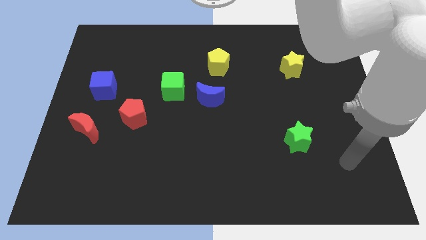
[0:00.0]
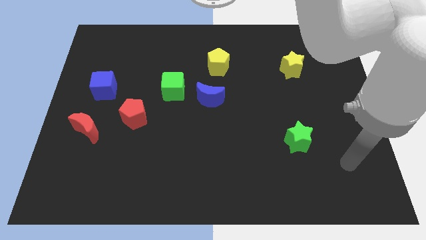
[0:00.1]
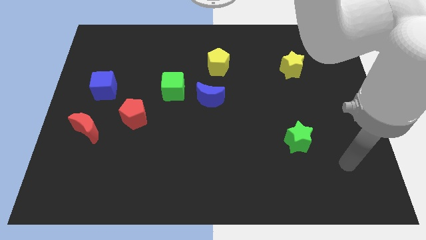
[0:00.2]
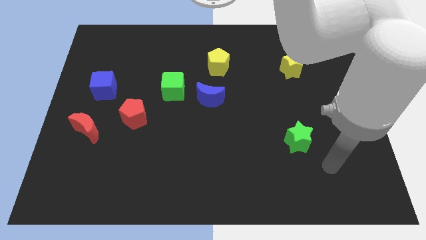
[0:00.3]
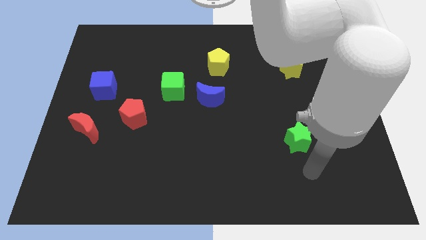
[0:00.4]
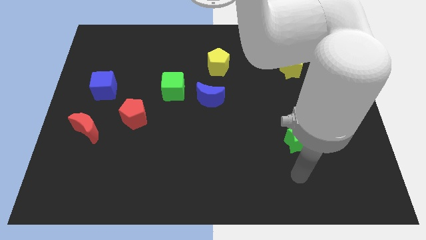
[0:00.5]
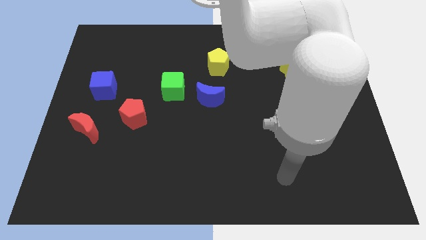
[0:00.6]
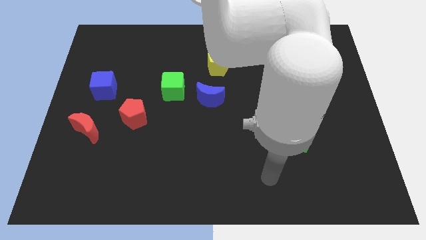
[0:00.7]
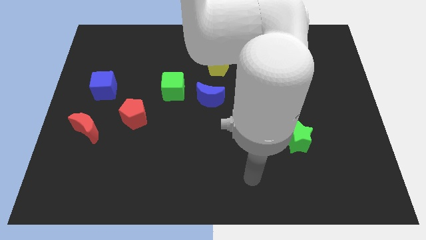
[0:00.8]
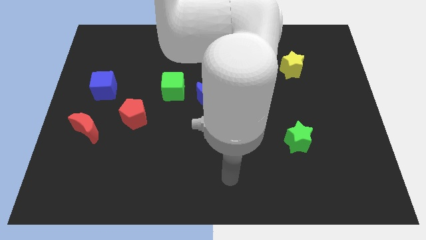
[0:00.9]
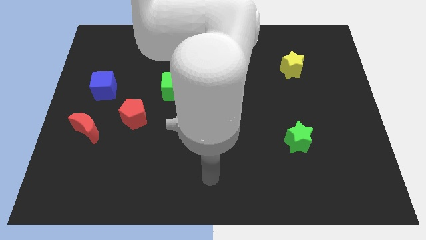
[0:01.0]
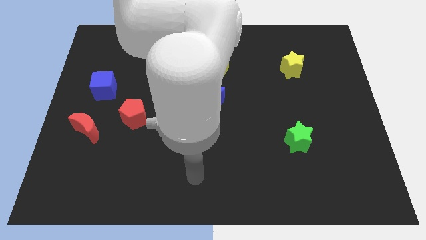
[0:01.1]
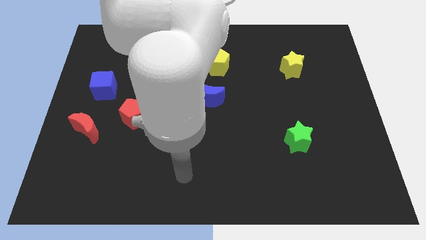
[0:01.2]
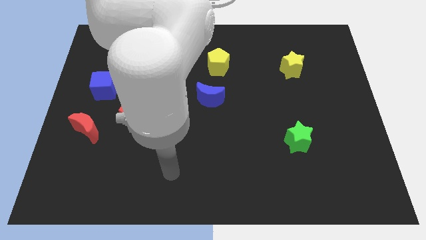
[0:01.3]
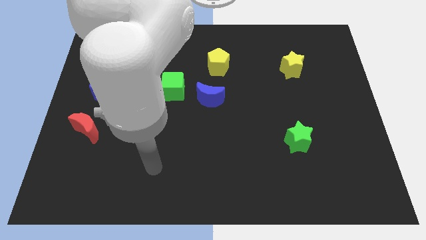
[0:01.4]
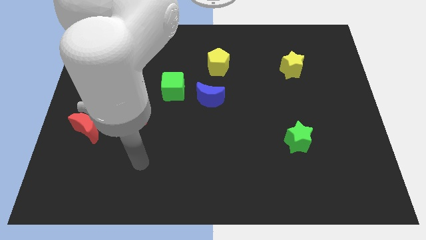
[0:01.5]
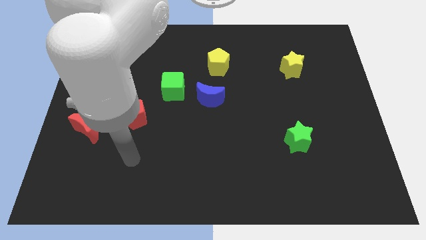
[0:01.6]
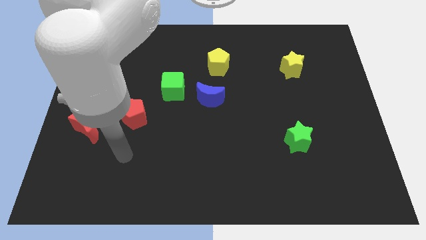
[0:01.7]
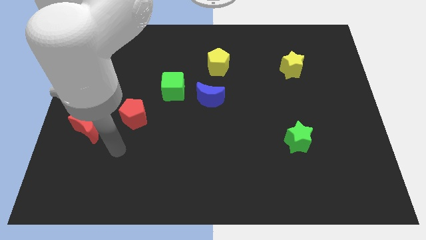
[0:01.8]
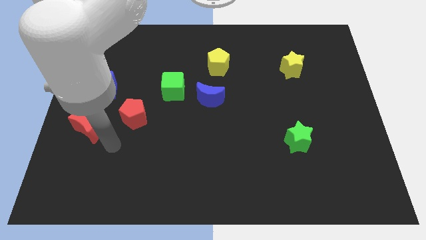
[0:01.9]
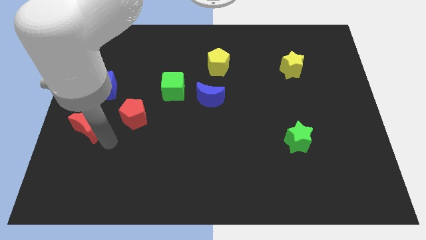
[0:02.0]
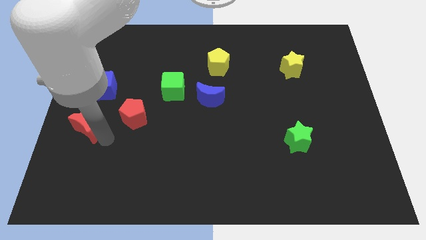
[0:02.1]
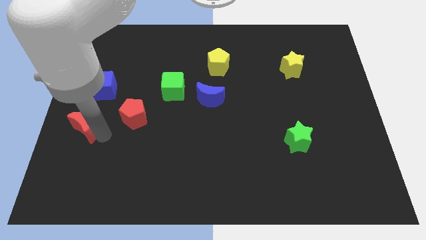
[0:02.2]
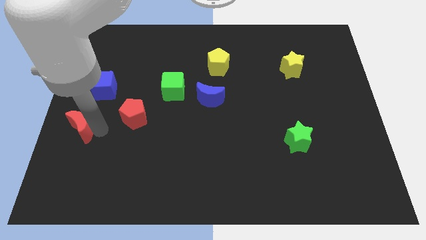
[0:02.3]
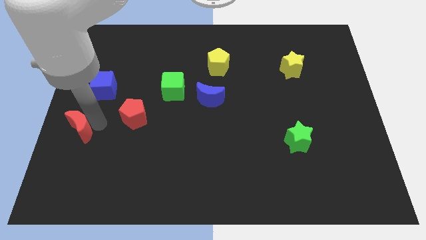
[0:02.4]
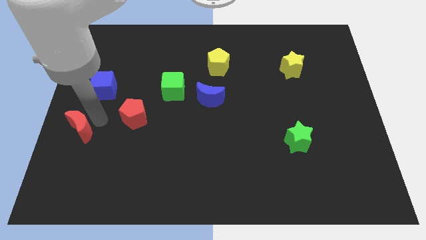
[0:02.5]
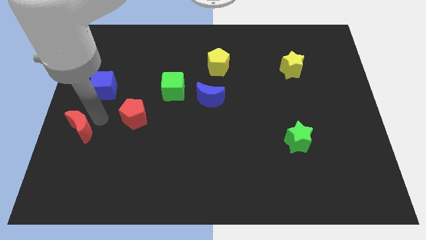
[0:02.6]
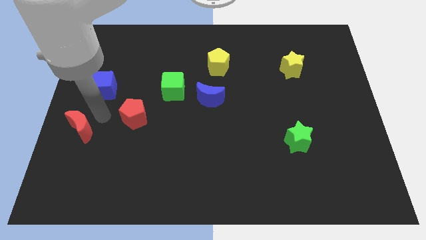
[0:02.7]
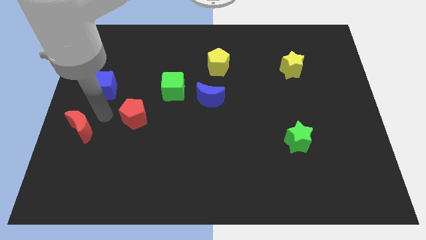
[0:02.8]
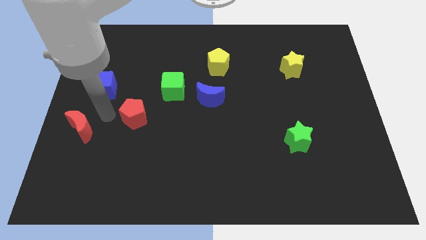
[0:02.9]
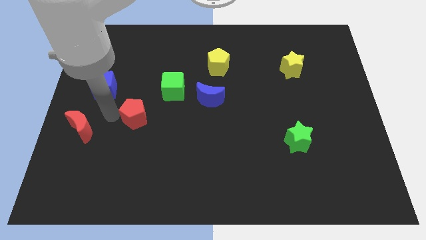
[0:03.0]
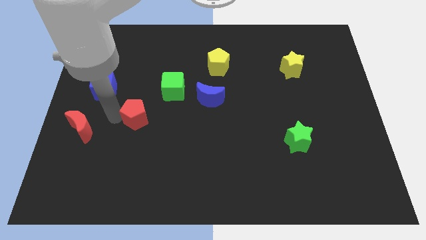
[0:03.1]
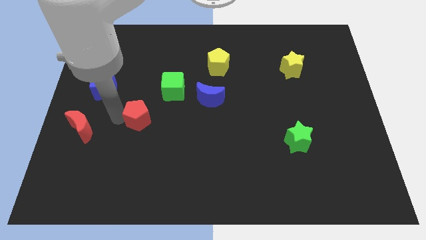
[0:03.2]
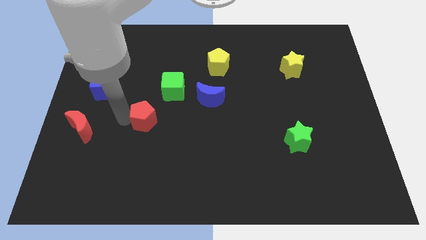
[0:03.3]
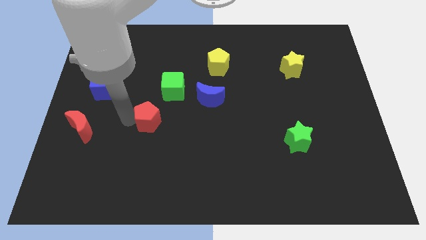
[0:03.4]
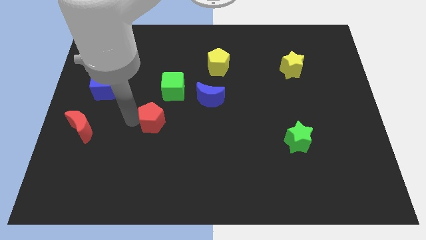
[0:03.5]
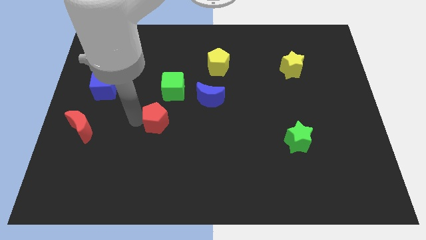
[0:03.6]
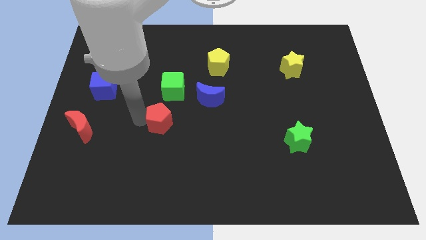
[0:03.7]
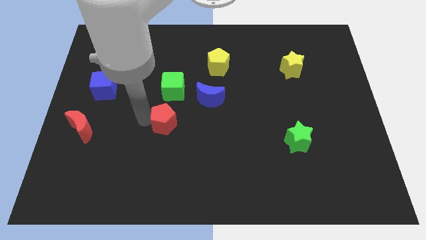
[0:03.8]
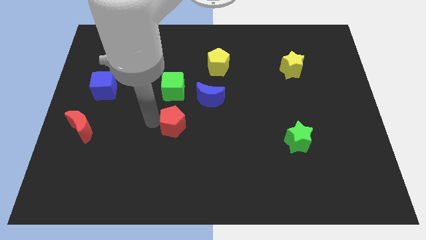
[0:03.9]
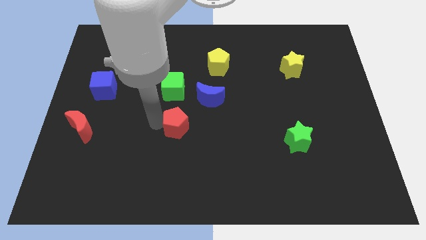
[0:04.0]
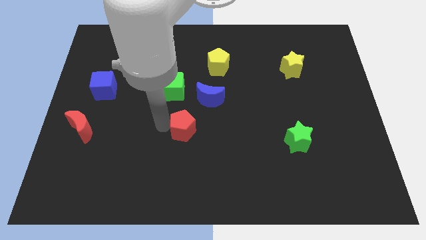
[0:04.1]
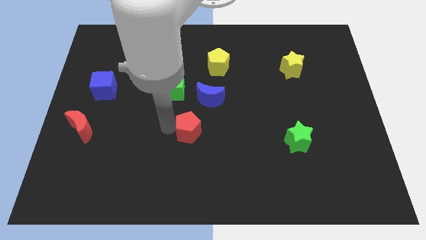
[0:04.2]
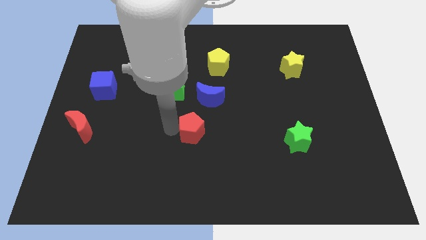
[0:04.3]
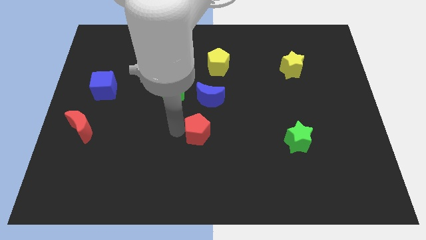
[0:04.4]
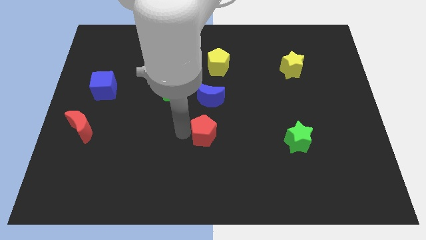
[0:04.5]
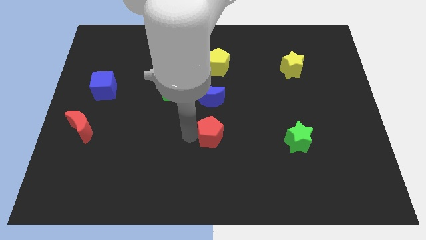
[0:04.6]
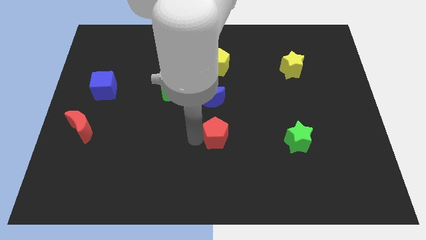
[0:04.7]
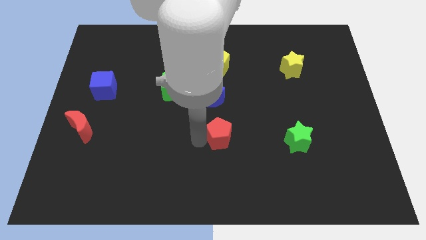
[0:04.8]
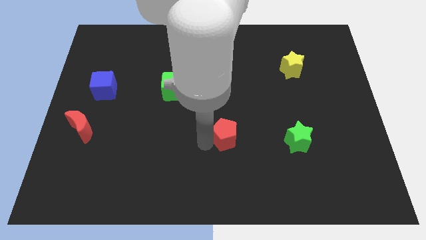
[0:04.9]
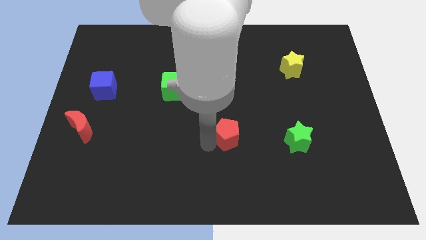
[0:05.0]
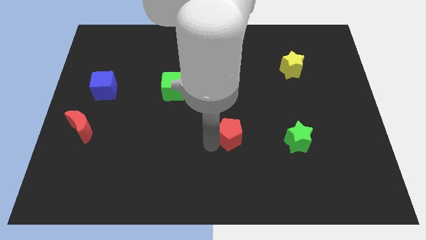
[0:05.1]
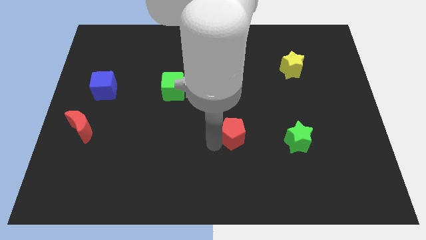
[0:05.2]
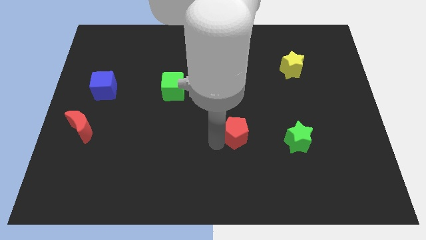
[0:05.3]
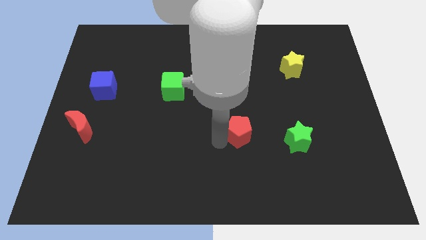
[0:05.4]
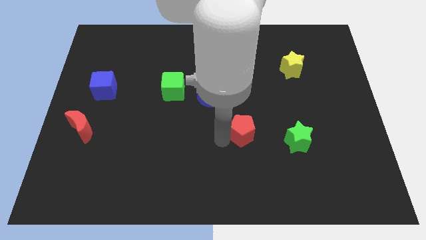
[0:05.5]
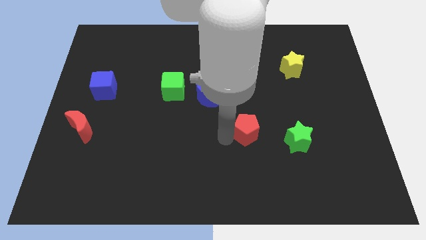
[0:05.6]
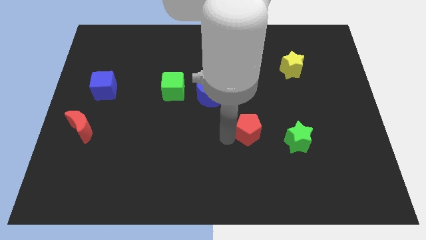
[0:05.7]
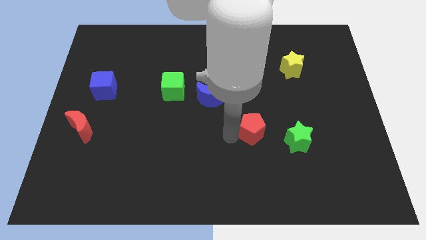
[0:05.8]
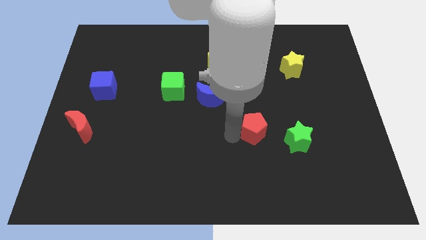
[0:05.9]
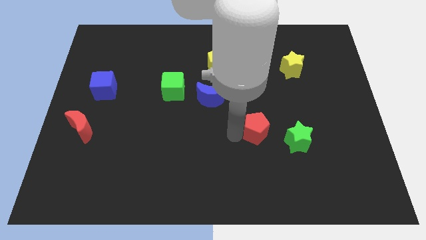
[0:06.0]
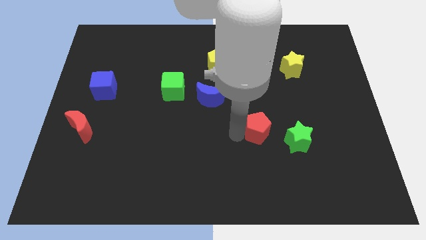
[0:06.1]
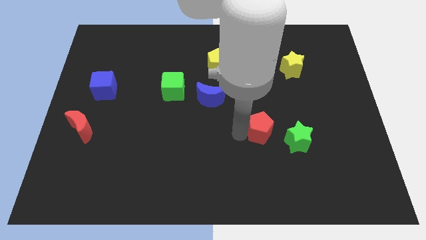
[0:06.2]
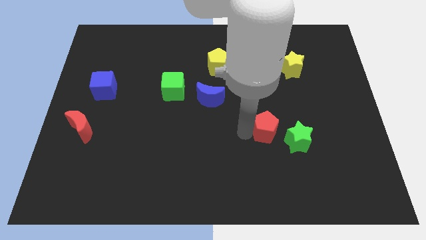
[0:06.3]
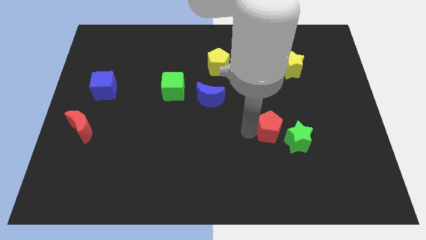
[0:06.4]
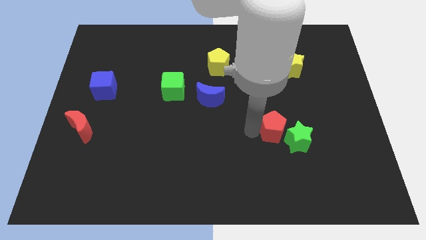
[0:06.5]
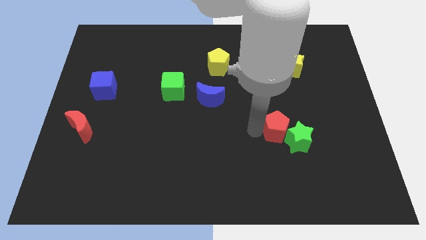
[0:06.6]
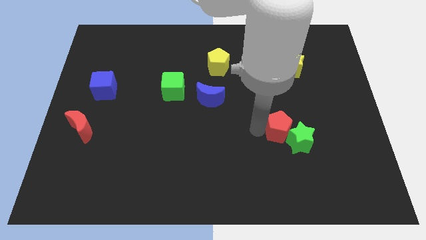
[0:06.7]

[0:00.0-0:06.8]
move the red pentagon next to the green star

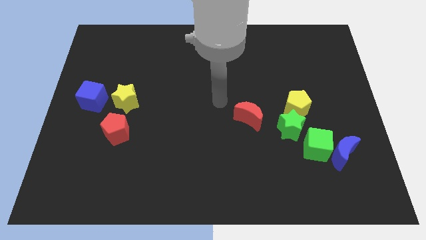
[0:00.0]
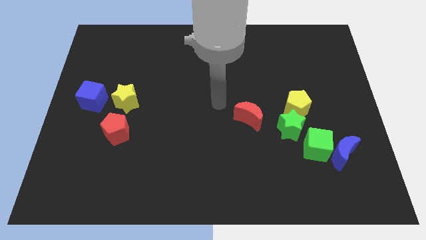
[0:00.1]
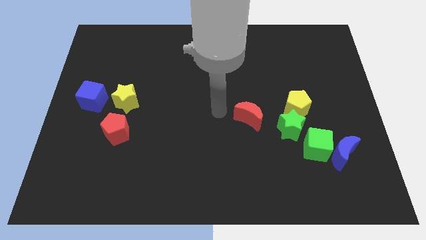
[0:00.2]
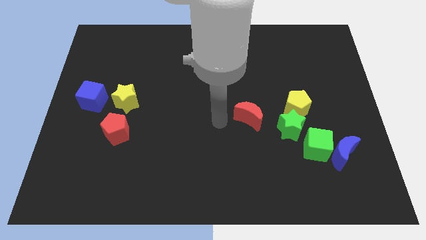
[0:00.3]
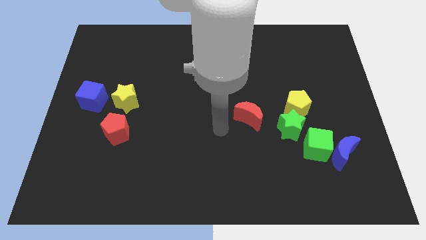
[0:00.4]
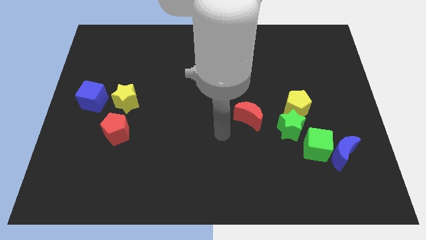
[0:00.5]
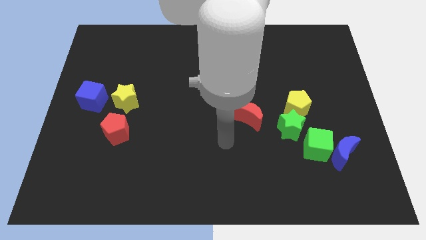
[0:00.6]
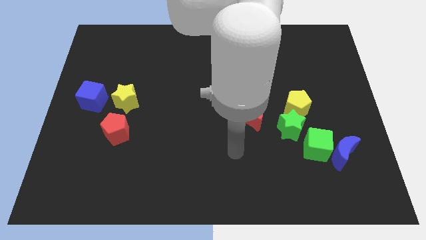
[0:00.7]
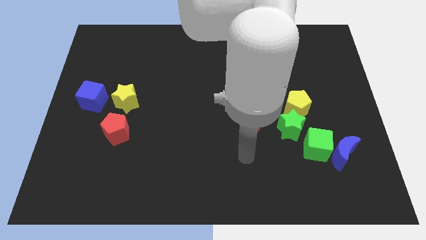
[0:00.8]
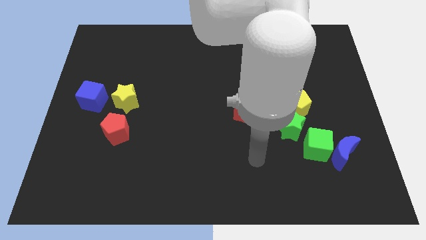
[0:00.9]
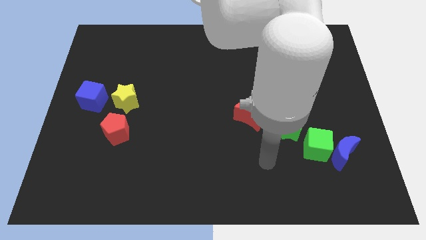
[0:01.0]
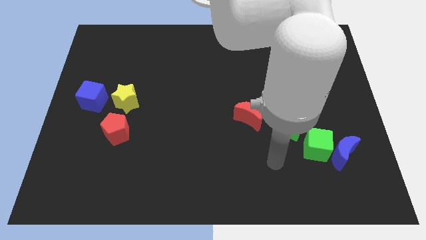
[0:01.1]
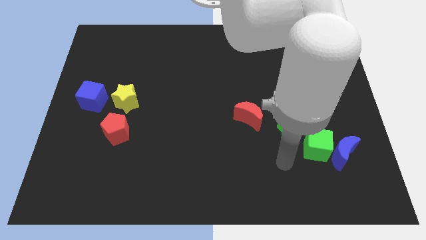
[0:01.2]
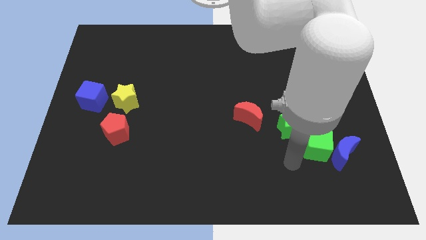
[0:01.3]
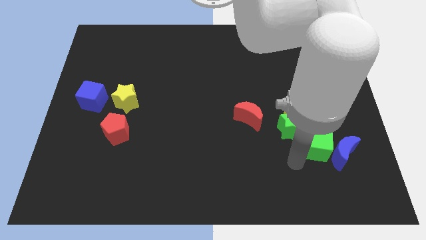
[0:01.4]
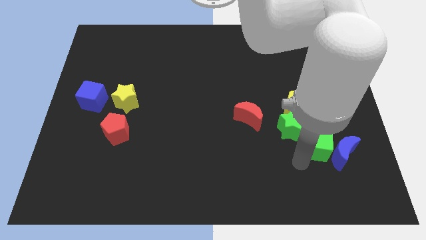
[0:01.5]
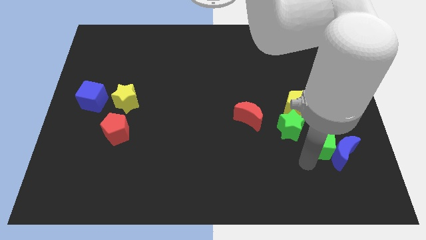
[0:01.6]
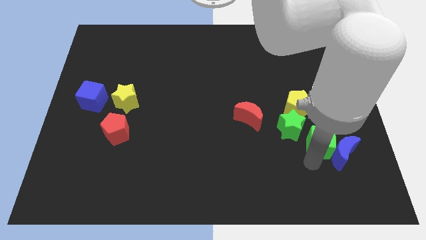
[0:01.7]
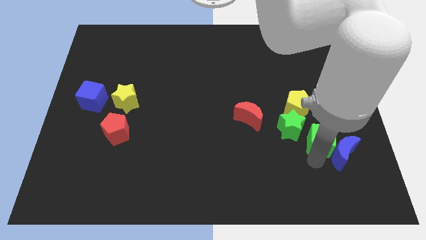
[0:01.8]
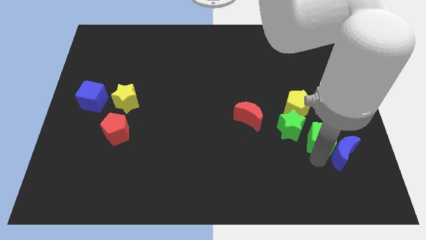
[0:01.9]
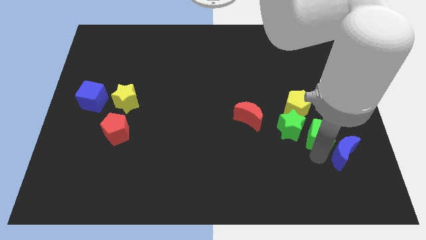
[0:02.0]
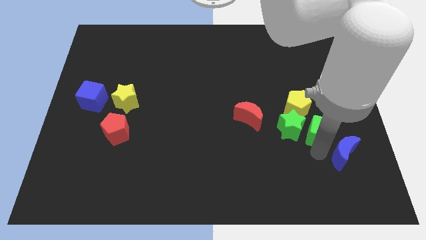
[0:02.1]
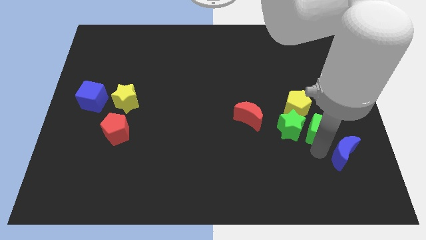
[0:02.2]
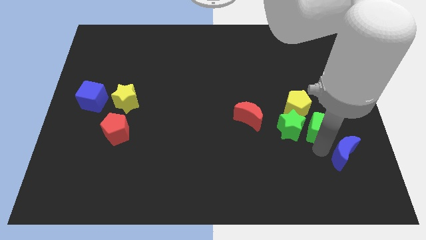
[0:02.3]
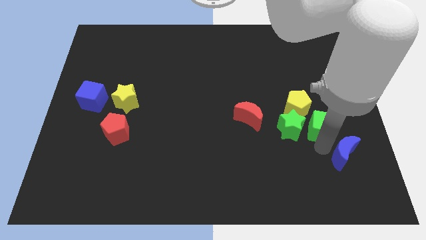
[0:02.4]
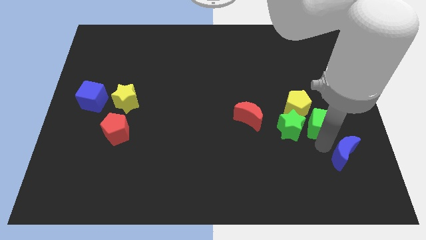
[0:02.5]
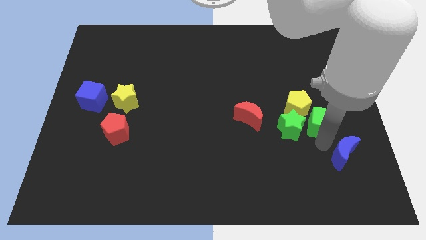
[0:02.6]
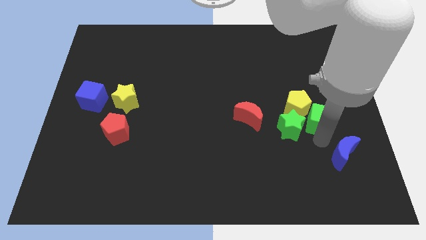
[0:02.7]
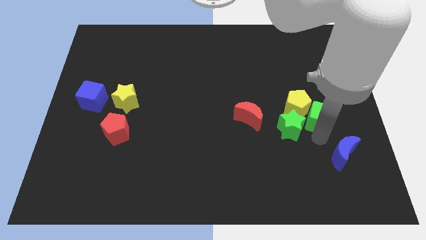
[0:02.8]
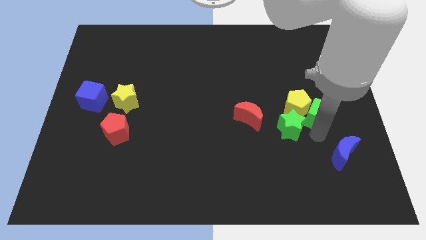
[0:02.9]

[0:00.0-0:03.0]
push the green cube towards the yellow pentagon
